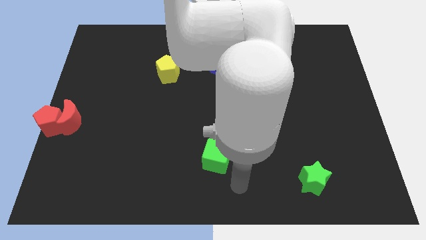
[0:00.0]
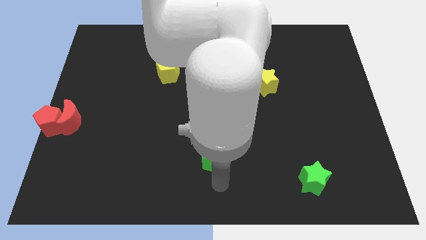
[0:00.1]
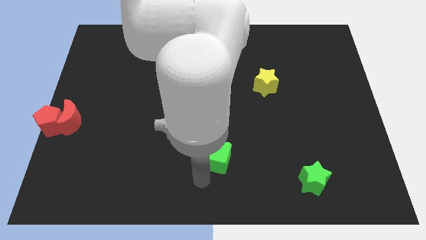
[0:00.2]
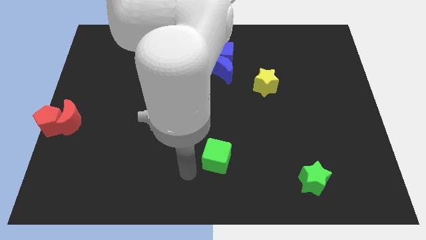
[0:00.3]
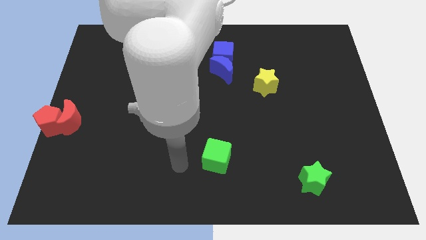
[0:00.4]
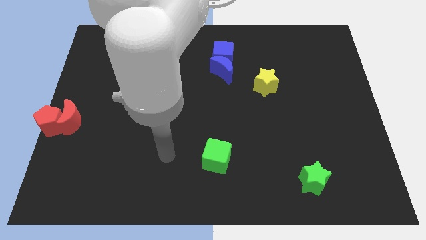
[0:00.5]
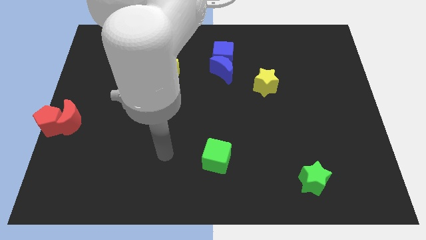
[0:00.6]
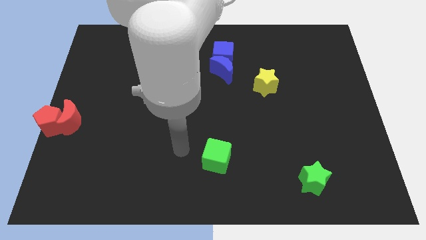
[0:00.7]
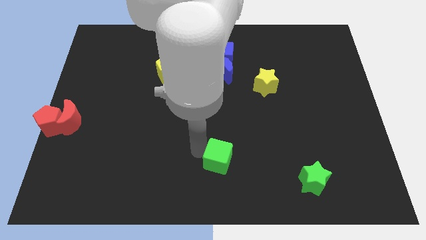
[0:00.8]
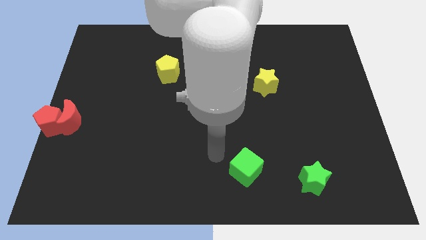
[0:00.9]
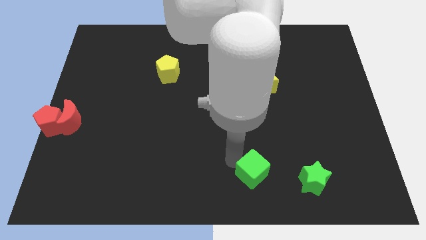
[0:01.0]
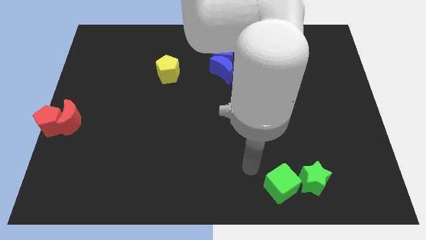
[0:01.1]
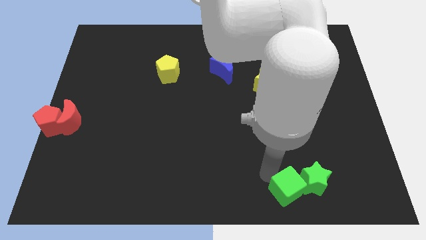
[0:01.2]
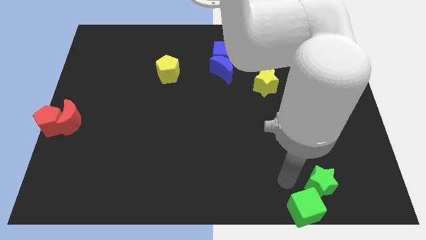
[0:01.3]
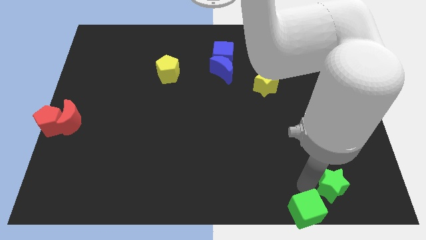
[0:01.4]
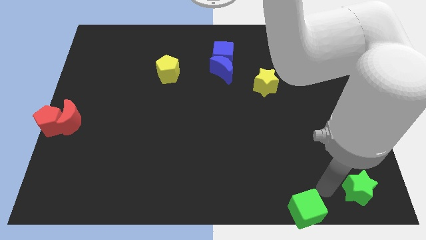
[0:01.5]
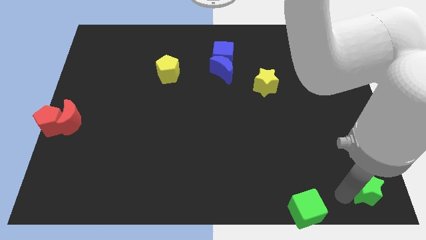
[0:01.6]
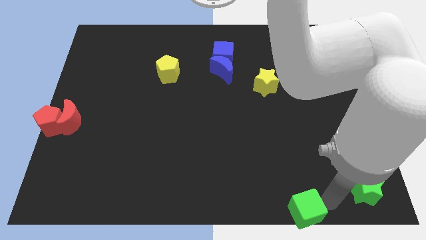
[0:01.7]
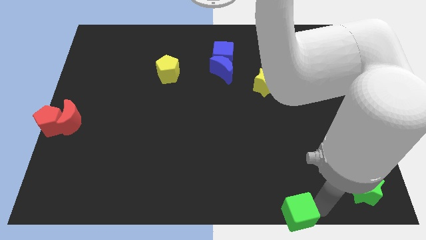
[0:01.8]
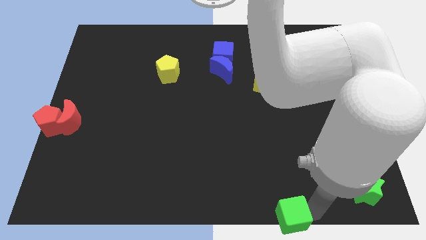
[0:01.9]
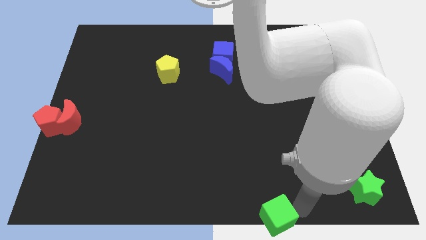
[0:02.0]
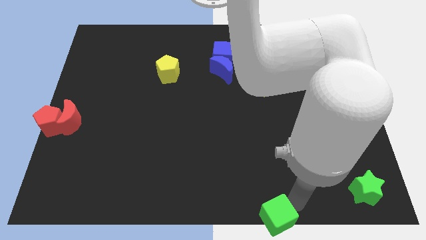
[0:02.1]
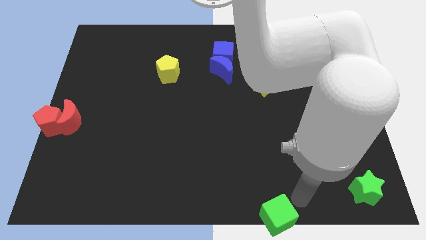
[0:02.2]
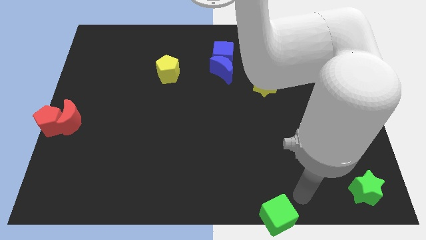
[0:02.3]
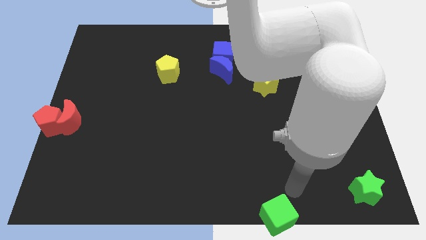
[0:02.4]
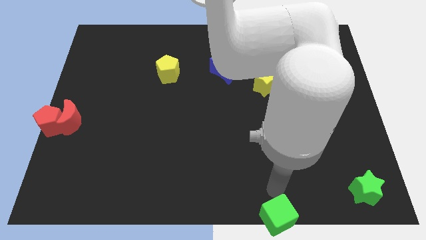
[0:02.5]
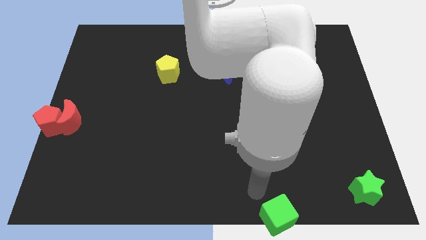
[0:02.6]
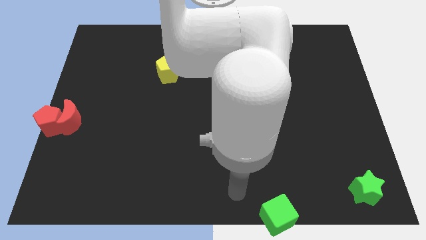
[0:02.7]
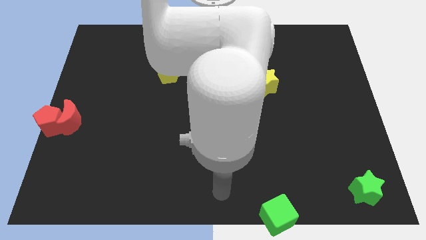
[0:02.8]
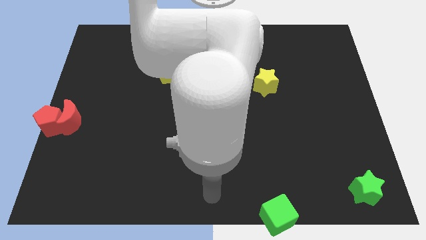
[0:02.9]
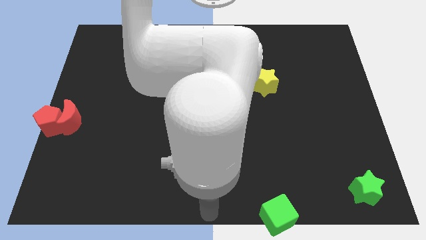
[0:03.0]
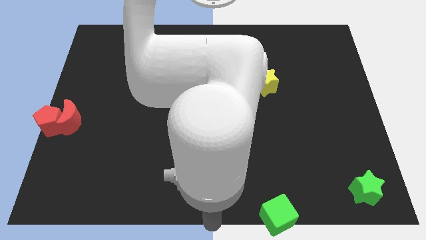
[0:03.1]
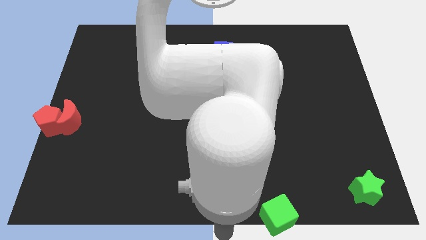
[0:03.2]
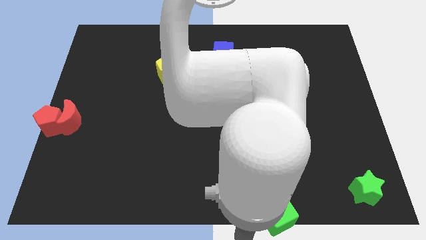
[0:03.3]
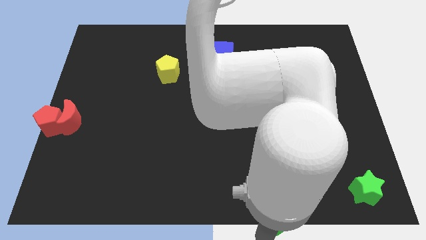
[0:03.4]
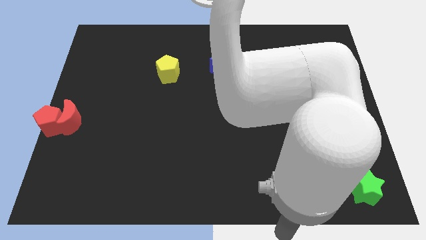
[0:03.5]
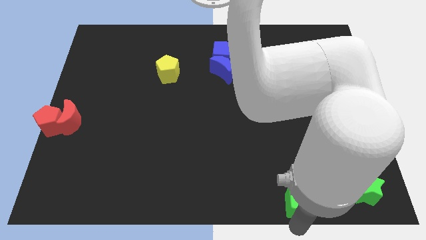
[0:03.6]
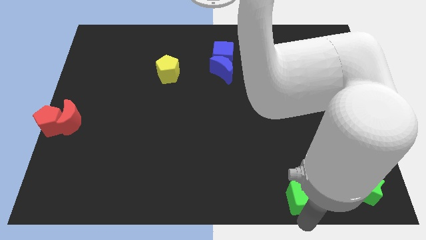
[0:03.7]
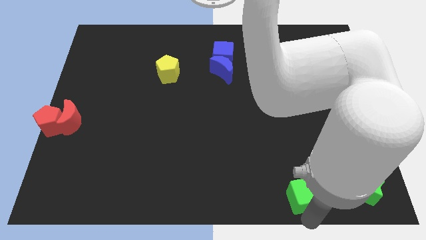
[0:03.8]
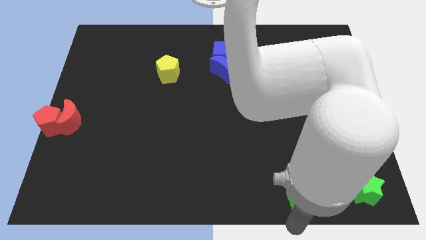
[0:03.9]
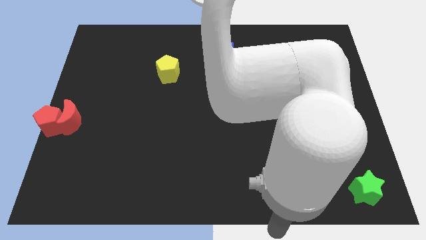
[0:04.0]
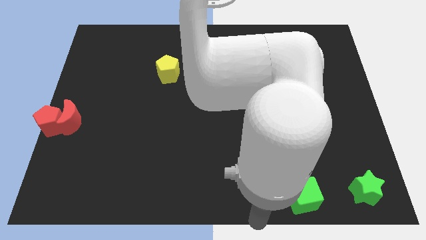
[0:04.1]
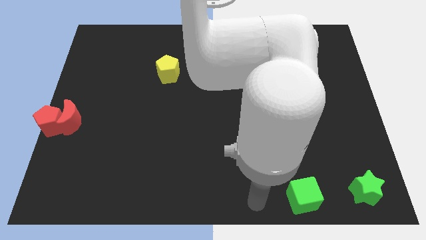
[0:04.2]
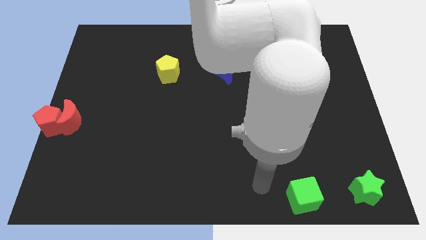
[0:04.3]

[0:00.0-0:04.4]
move the green blocks towards the bottom right corner

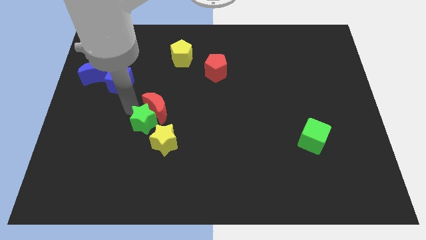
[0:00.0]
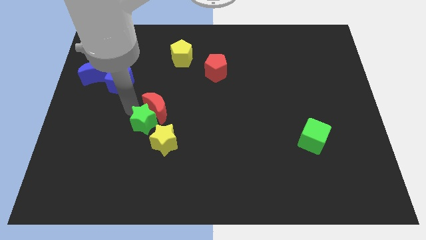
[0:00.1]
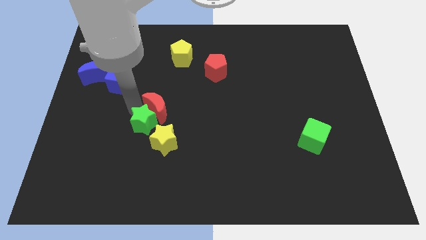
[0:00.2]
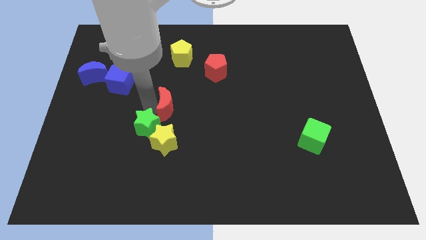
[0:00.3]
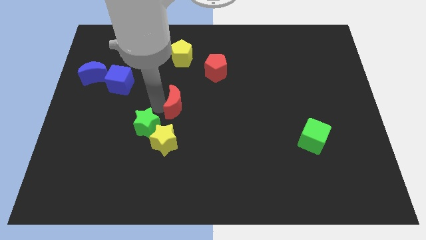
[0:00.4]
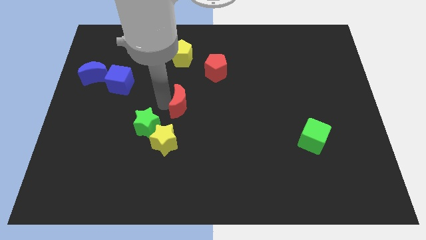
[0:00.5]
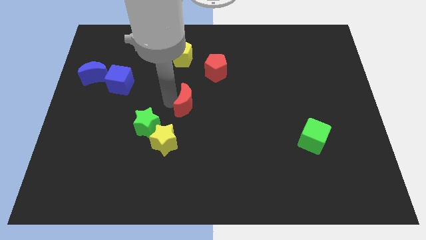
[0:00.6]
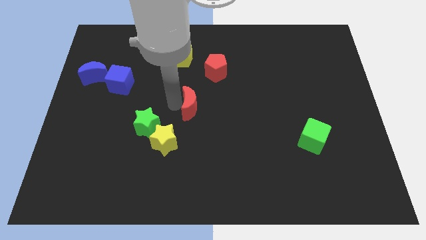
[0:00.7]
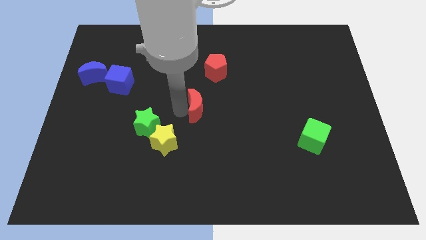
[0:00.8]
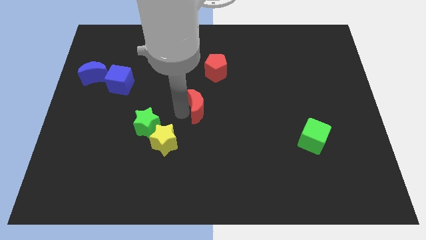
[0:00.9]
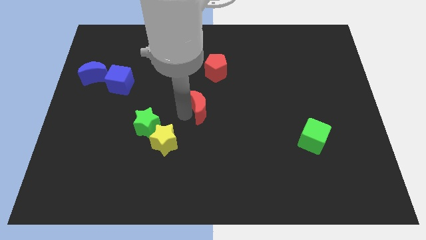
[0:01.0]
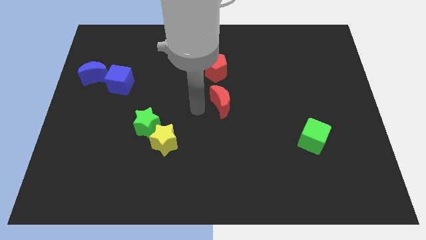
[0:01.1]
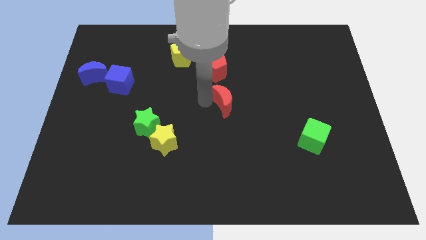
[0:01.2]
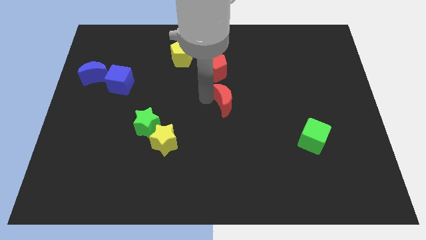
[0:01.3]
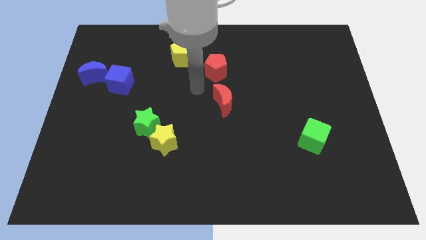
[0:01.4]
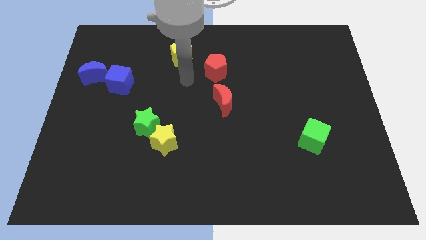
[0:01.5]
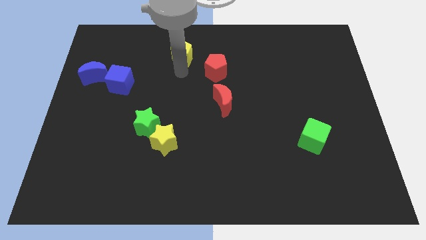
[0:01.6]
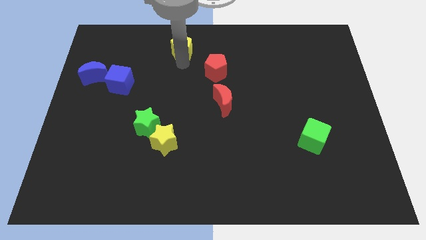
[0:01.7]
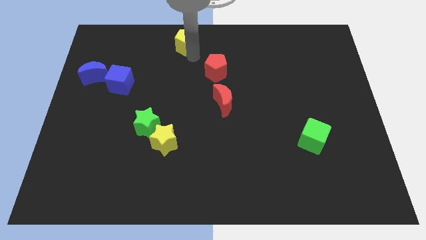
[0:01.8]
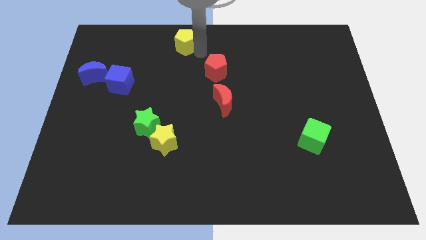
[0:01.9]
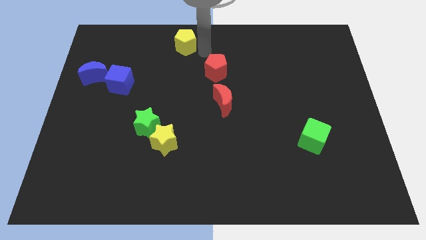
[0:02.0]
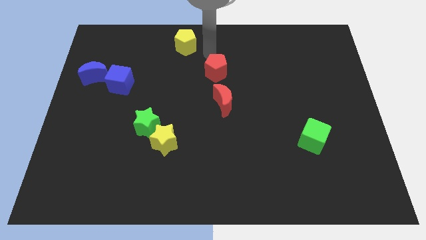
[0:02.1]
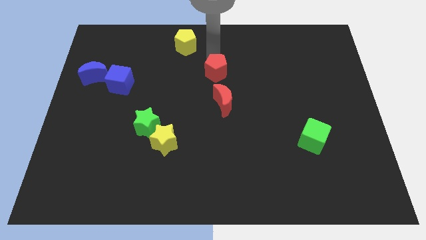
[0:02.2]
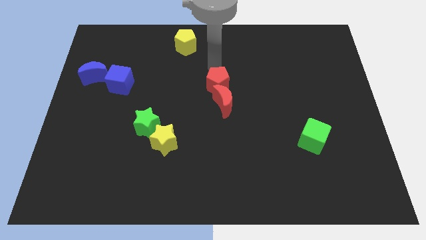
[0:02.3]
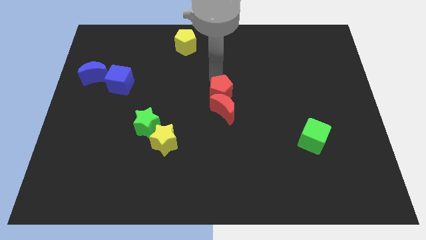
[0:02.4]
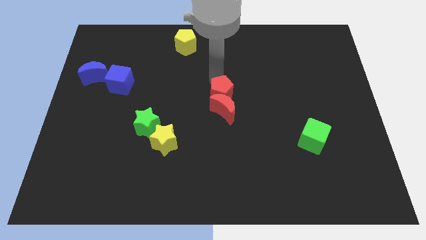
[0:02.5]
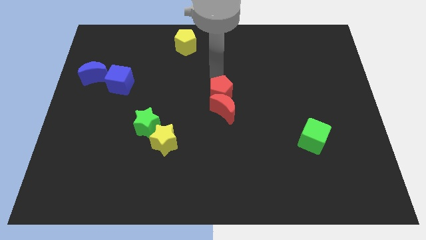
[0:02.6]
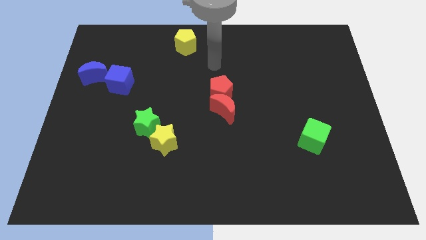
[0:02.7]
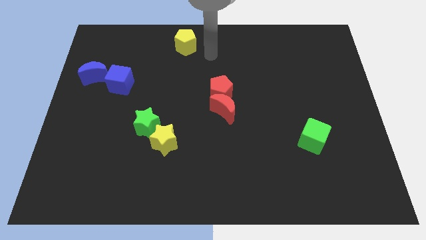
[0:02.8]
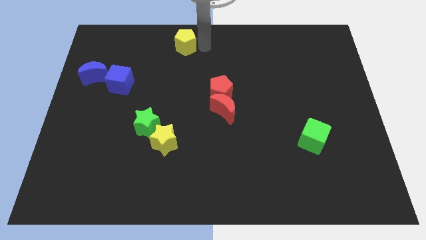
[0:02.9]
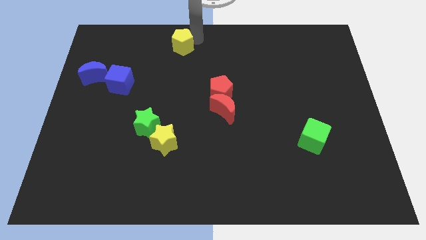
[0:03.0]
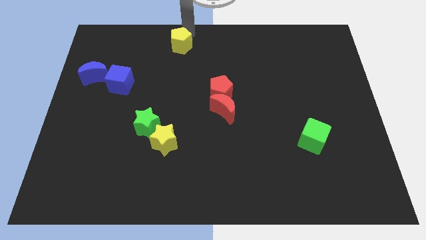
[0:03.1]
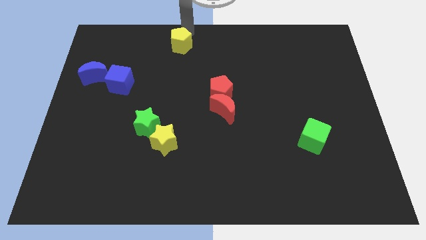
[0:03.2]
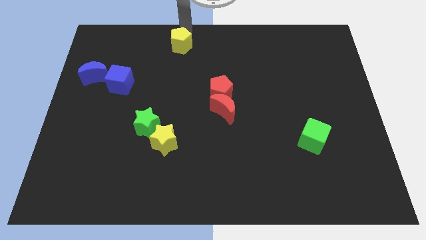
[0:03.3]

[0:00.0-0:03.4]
move red pentagon and red crescent to the center of the board

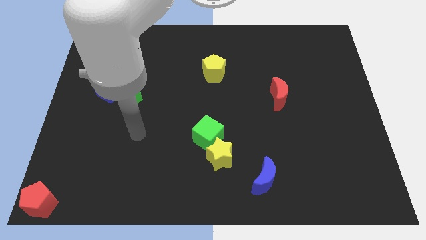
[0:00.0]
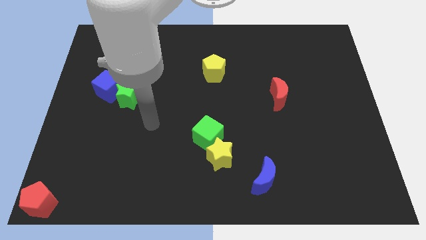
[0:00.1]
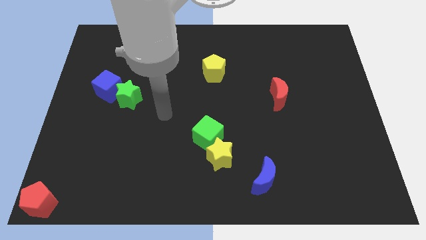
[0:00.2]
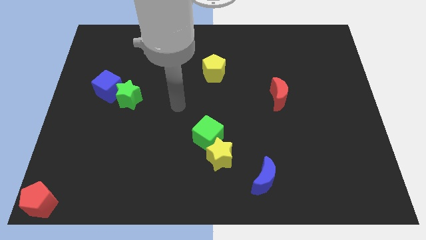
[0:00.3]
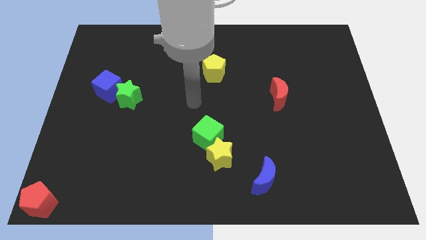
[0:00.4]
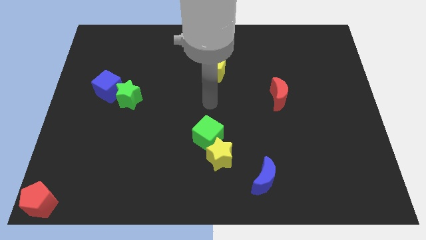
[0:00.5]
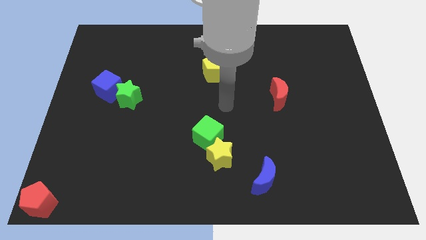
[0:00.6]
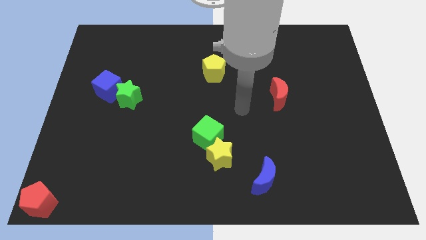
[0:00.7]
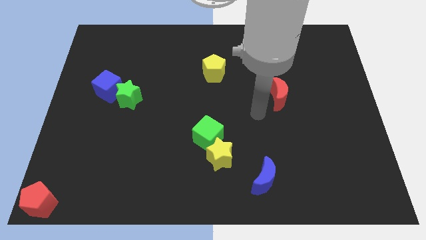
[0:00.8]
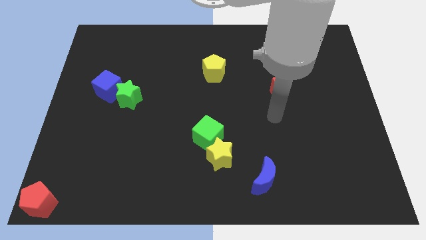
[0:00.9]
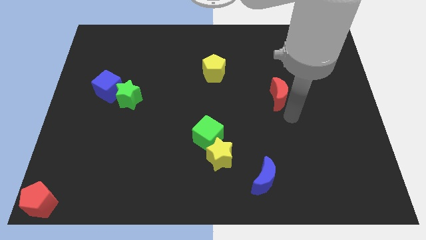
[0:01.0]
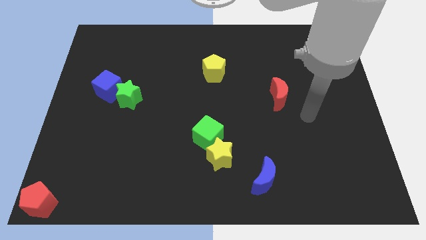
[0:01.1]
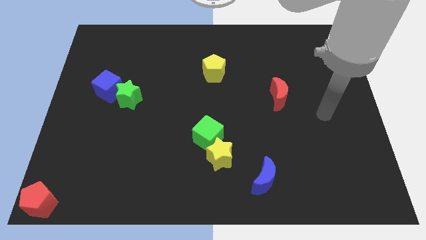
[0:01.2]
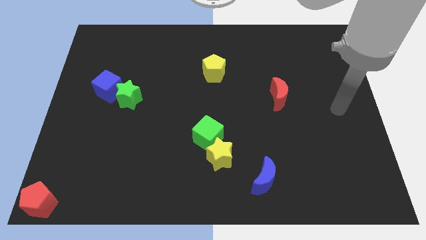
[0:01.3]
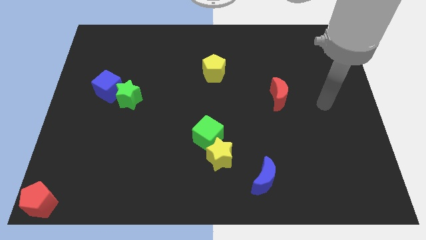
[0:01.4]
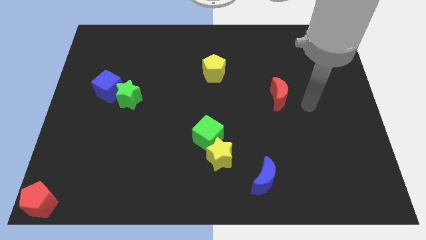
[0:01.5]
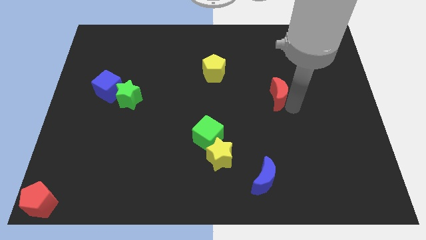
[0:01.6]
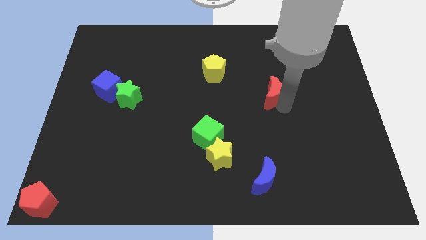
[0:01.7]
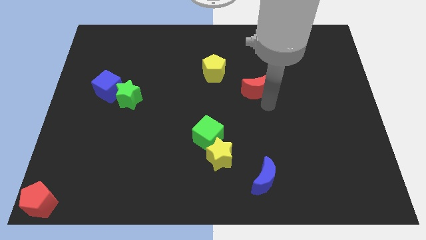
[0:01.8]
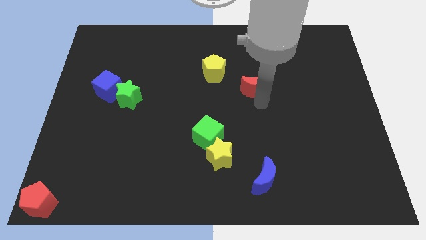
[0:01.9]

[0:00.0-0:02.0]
move the red crescent towards the left
